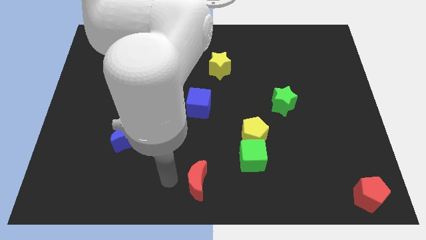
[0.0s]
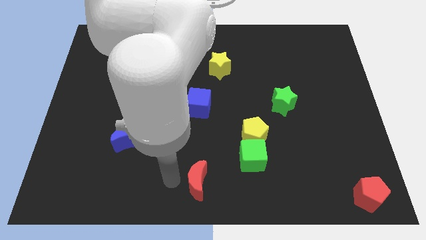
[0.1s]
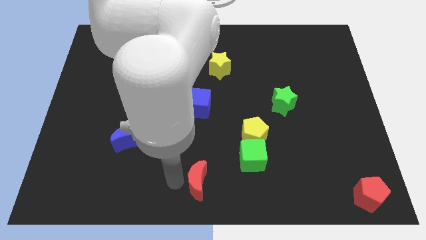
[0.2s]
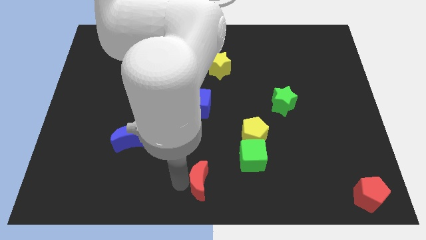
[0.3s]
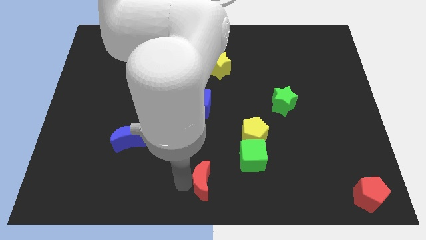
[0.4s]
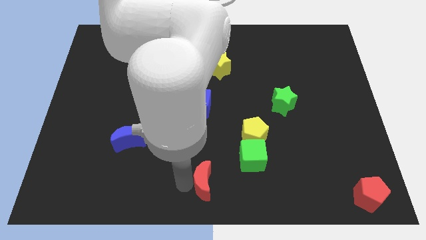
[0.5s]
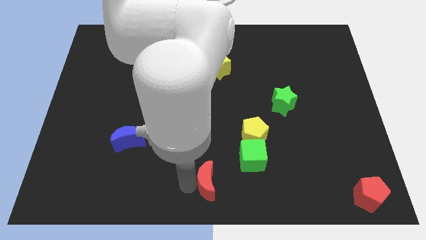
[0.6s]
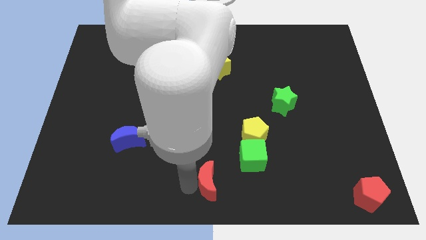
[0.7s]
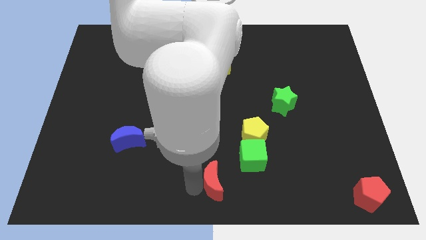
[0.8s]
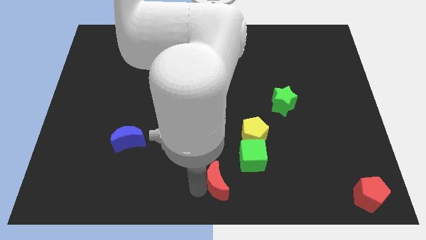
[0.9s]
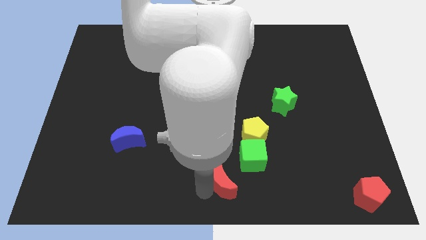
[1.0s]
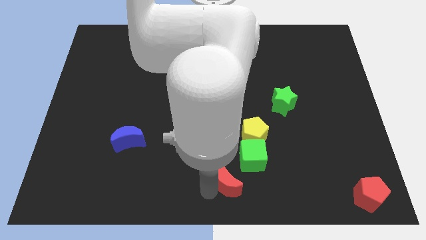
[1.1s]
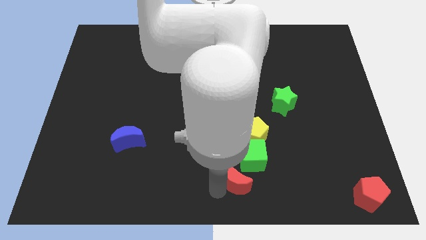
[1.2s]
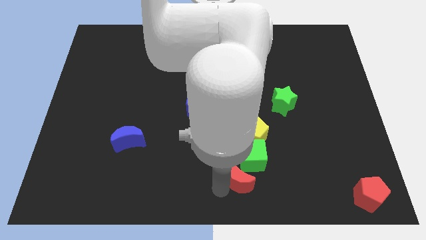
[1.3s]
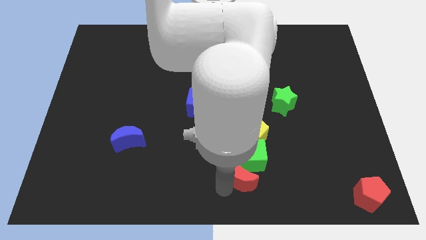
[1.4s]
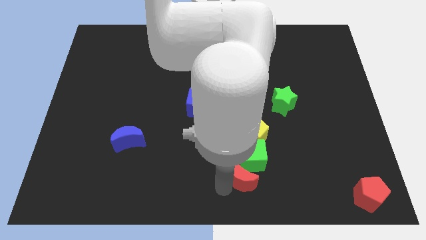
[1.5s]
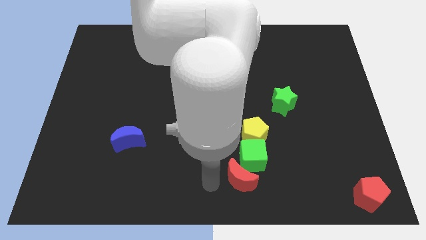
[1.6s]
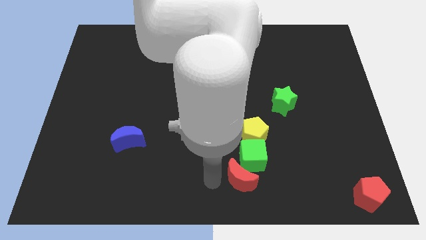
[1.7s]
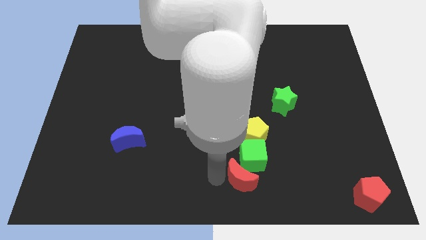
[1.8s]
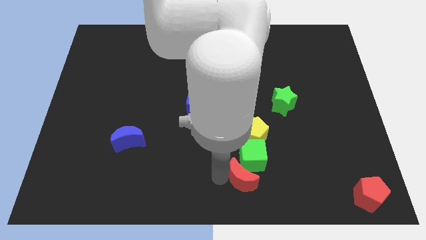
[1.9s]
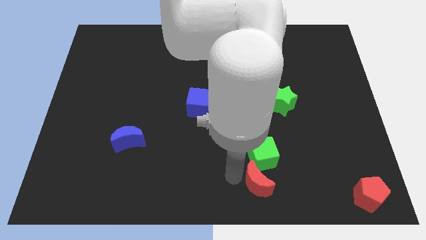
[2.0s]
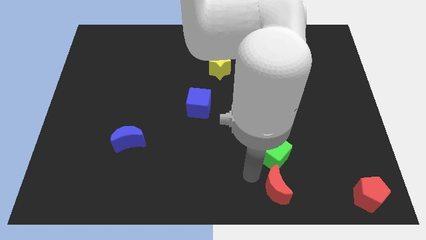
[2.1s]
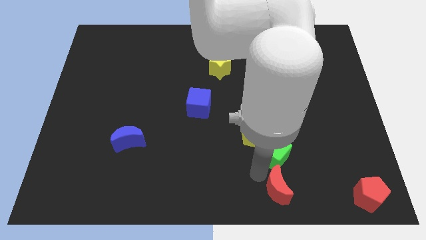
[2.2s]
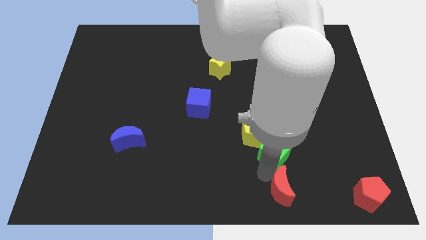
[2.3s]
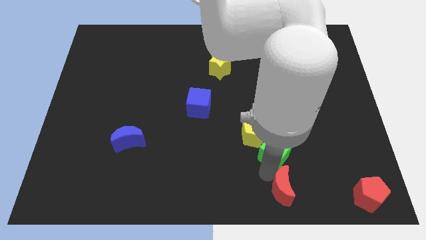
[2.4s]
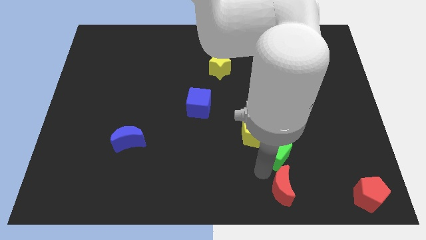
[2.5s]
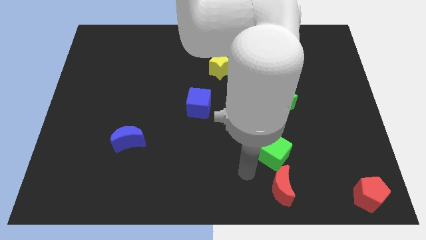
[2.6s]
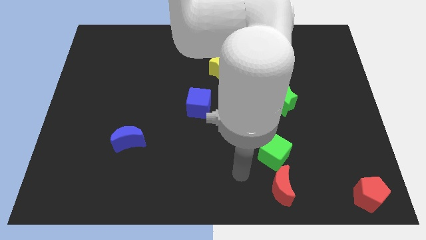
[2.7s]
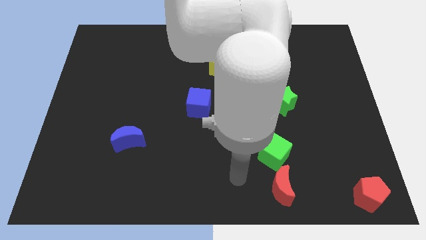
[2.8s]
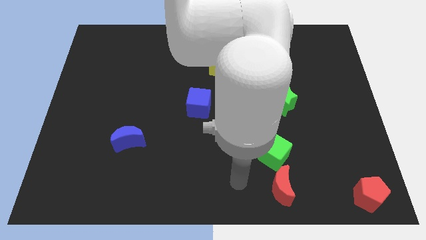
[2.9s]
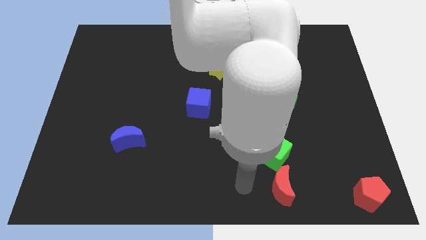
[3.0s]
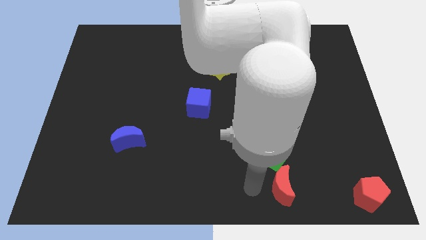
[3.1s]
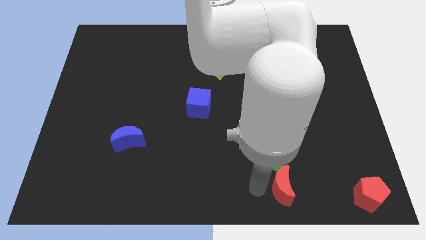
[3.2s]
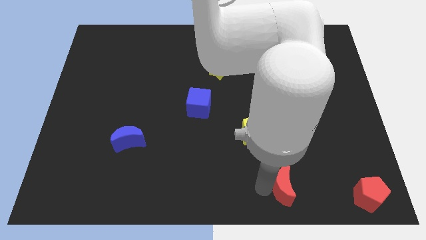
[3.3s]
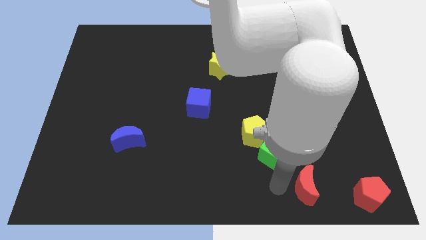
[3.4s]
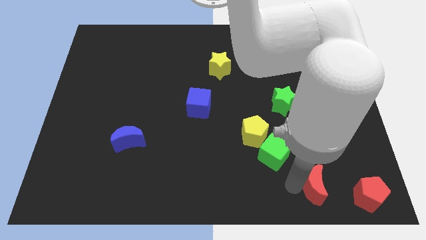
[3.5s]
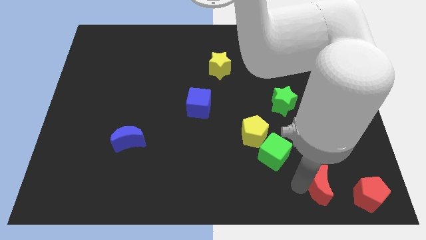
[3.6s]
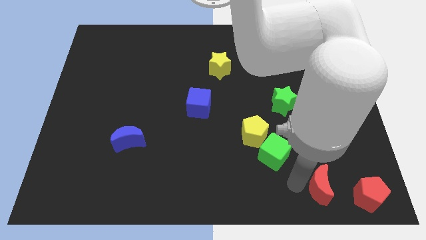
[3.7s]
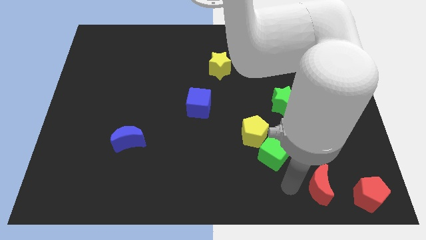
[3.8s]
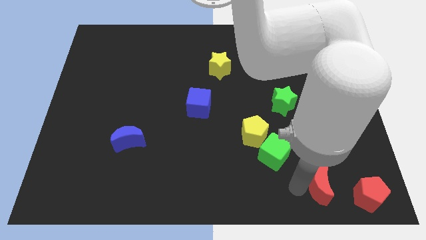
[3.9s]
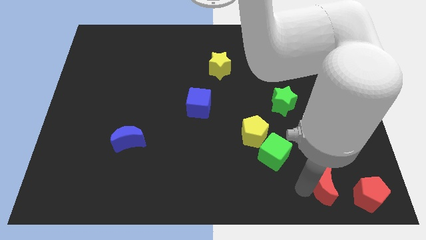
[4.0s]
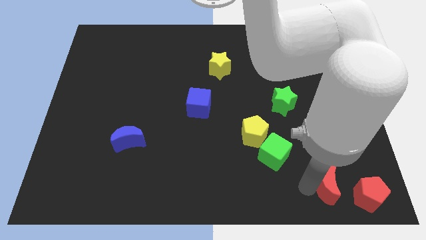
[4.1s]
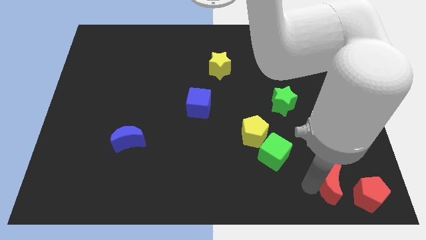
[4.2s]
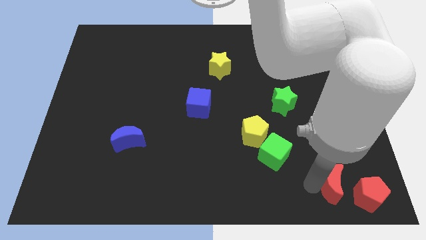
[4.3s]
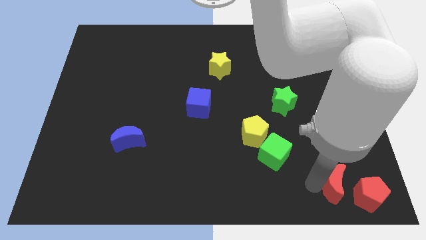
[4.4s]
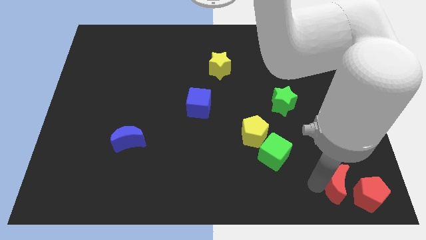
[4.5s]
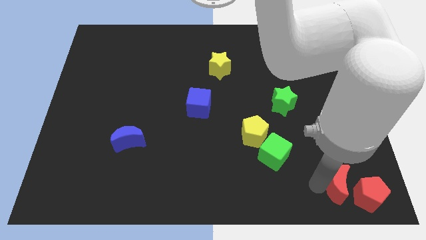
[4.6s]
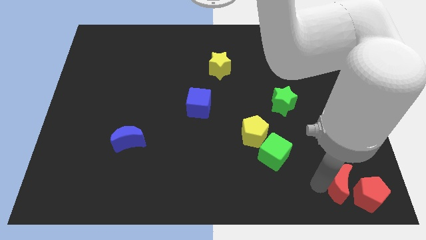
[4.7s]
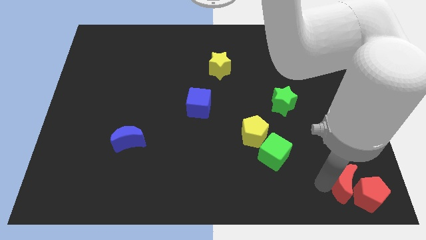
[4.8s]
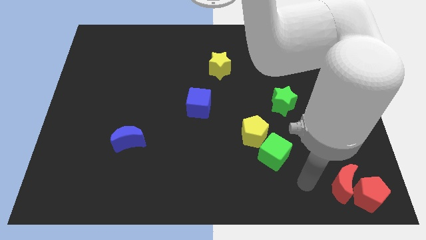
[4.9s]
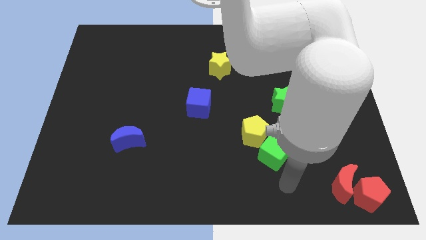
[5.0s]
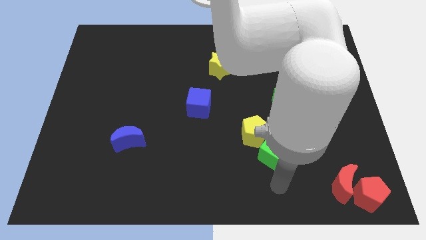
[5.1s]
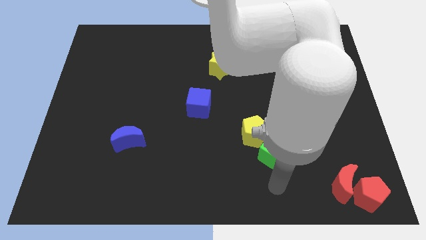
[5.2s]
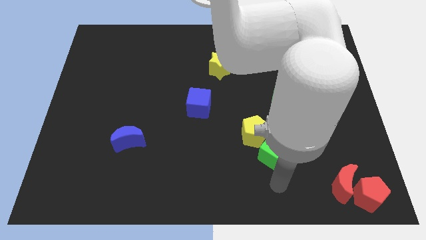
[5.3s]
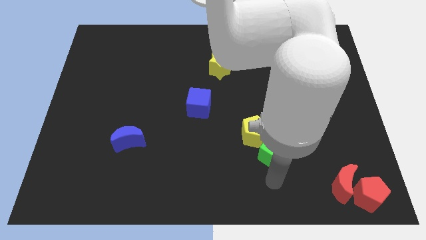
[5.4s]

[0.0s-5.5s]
move red moon close to the red pentagon

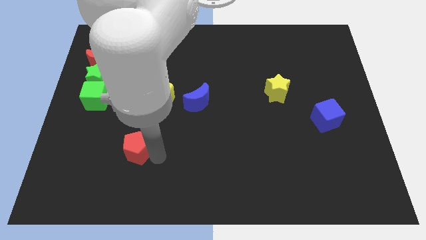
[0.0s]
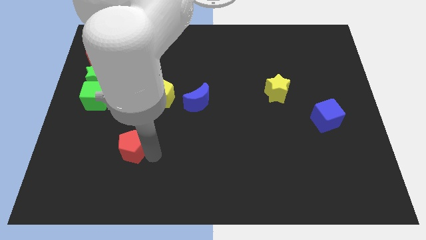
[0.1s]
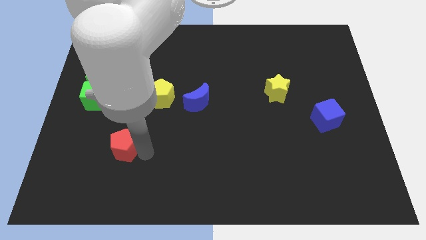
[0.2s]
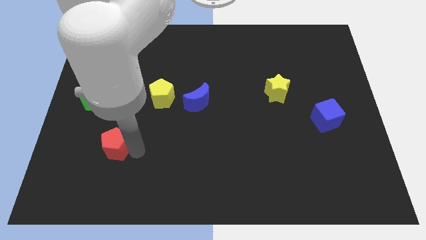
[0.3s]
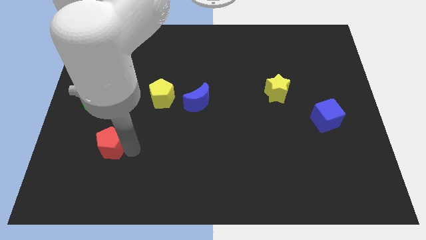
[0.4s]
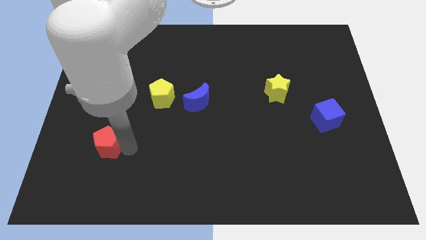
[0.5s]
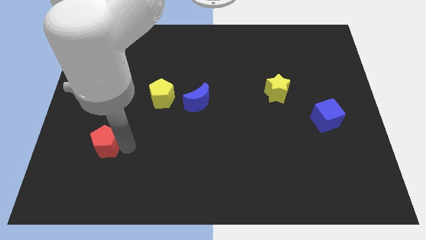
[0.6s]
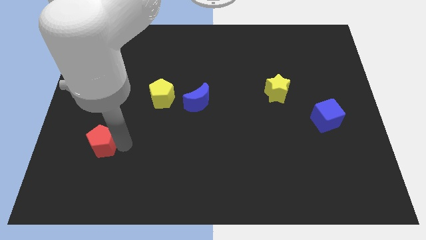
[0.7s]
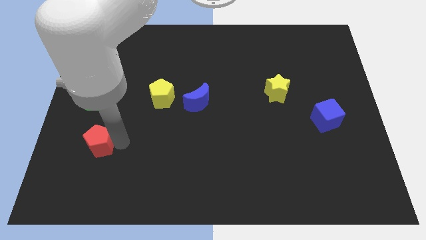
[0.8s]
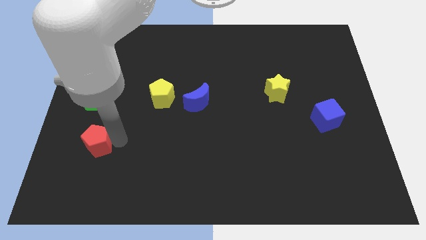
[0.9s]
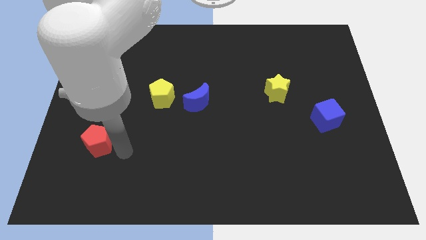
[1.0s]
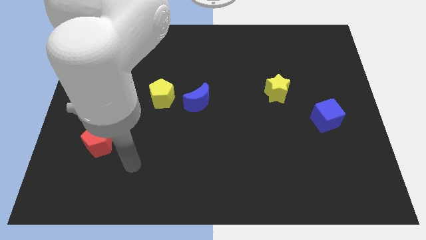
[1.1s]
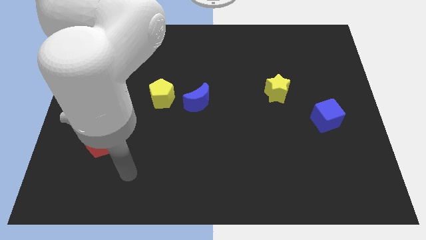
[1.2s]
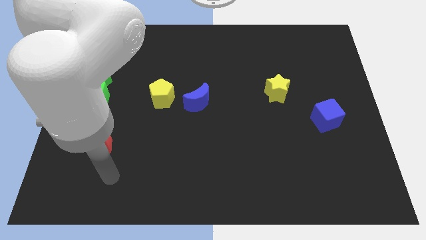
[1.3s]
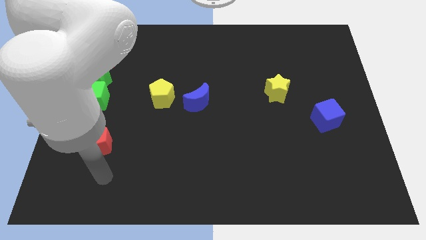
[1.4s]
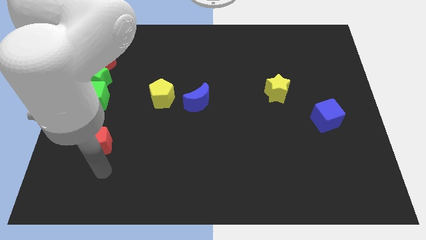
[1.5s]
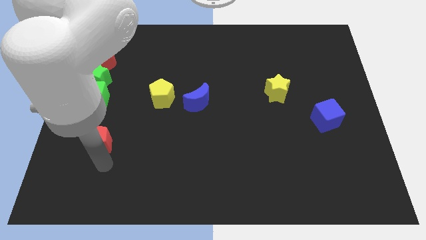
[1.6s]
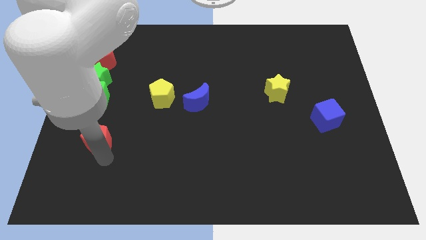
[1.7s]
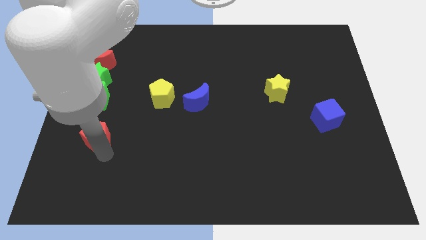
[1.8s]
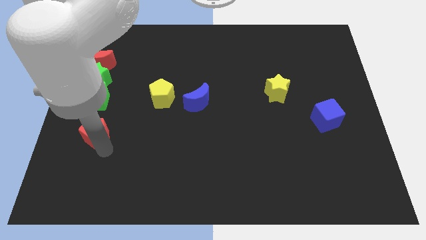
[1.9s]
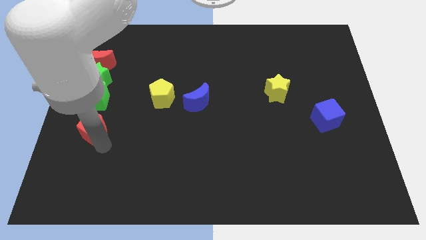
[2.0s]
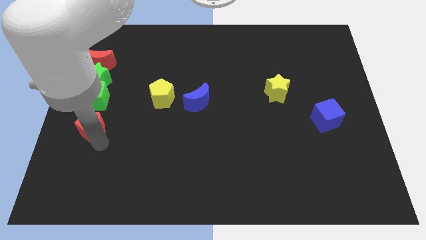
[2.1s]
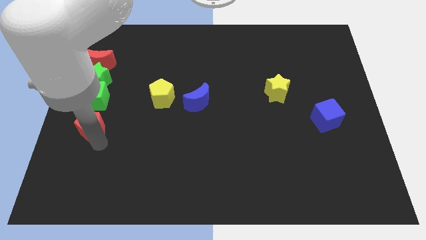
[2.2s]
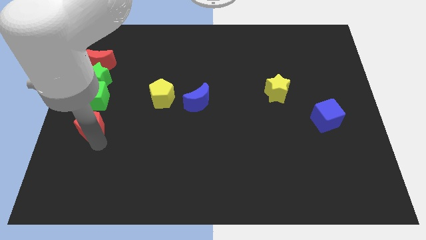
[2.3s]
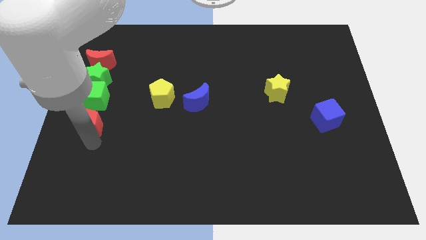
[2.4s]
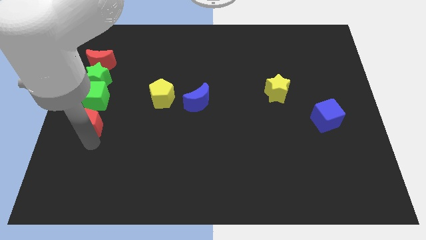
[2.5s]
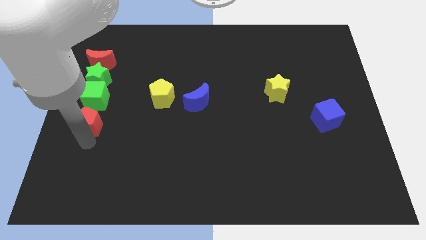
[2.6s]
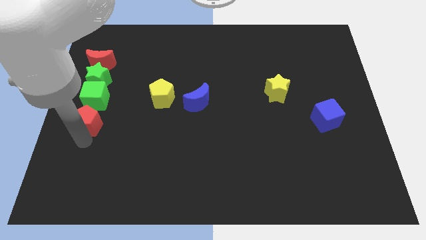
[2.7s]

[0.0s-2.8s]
place red pentagon below green cube

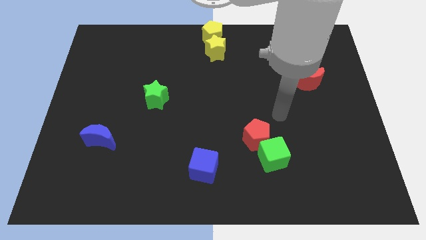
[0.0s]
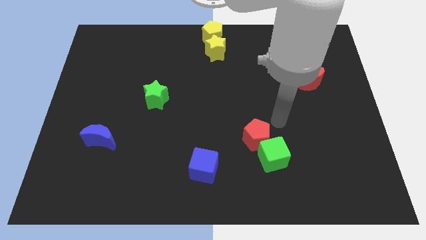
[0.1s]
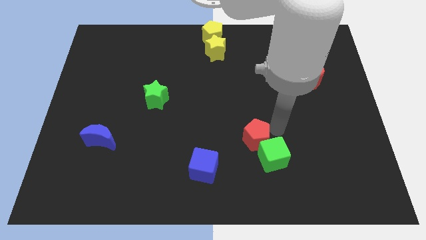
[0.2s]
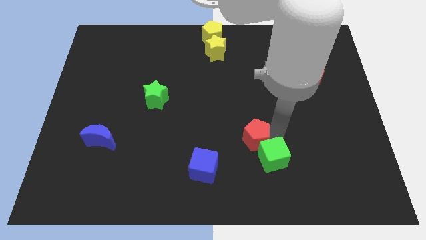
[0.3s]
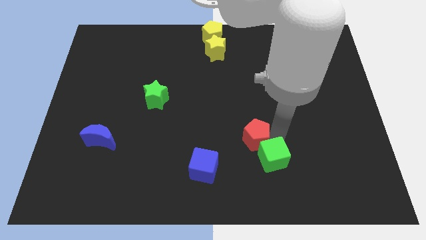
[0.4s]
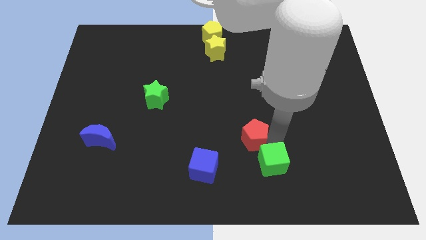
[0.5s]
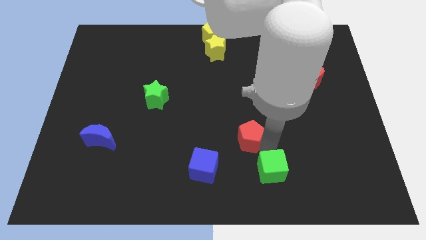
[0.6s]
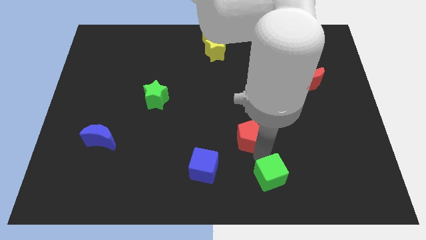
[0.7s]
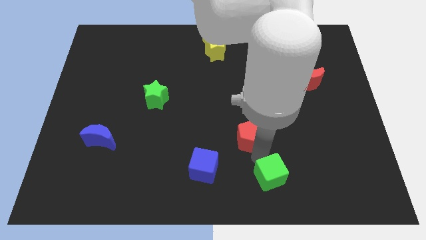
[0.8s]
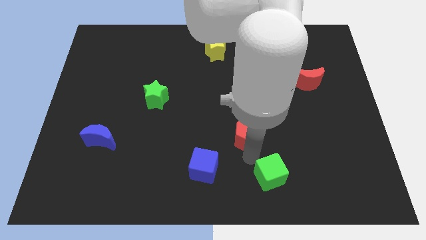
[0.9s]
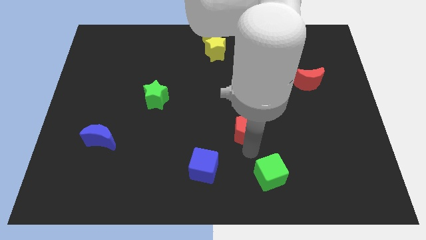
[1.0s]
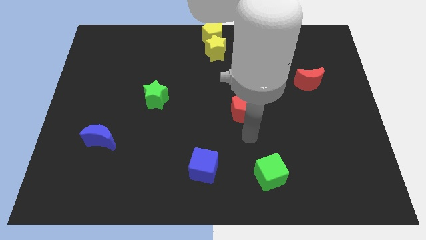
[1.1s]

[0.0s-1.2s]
separate the red pentagon and the green cube
